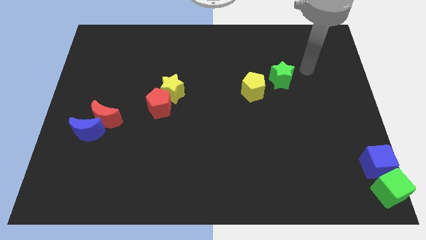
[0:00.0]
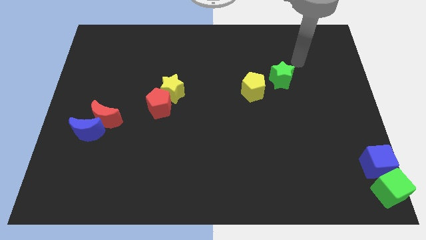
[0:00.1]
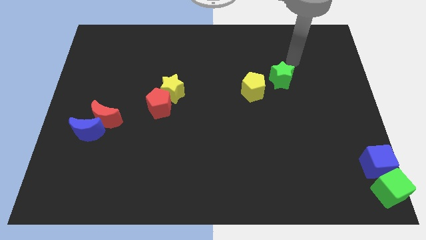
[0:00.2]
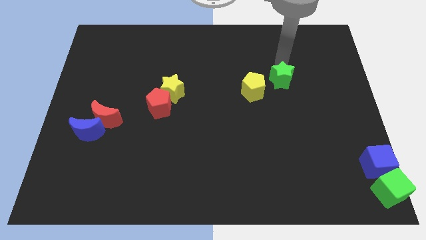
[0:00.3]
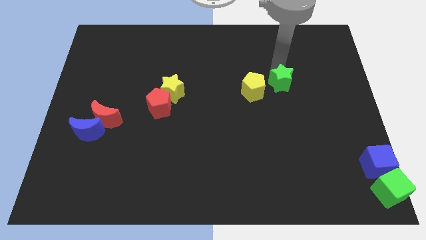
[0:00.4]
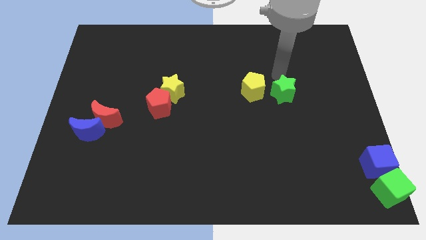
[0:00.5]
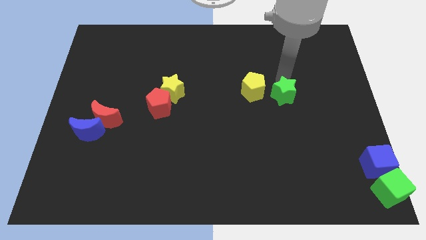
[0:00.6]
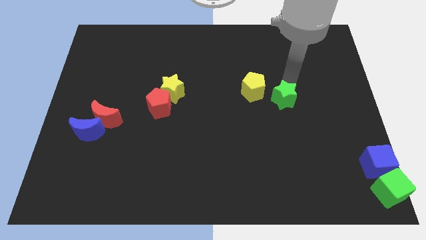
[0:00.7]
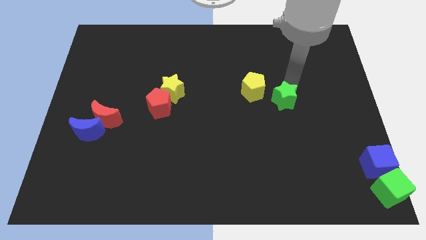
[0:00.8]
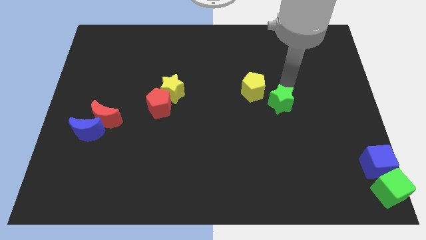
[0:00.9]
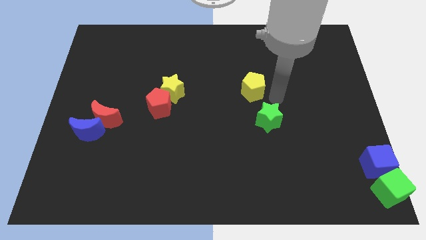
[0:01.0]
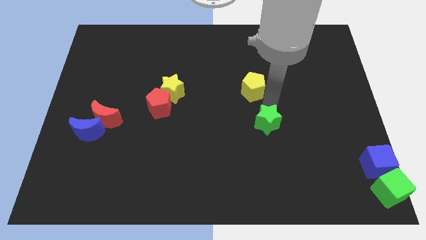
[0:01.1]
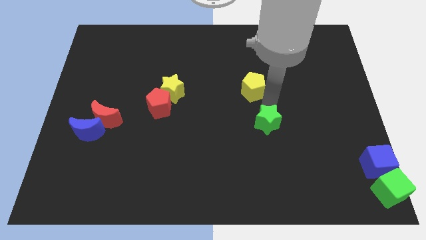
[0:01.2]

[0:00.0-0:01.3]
push green star to the bottom of yellow pentagon

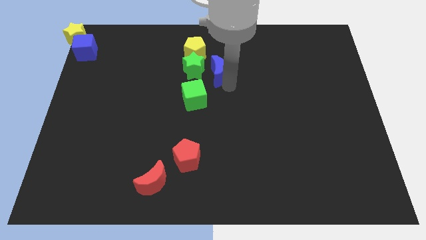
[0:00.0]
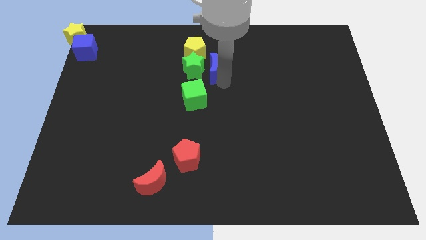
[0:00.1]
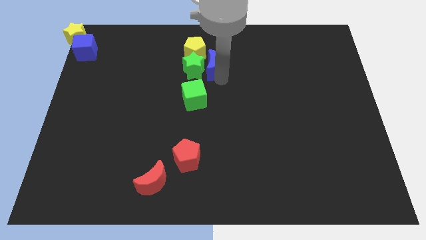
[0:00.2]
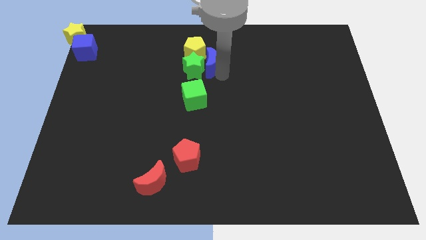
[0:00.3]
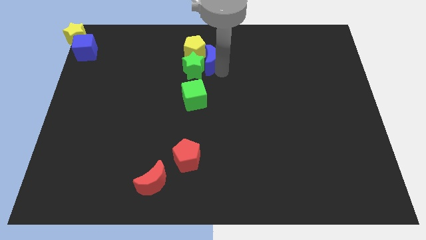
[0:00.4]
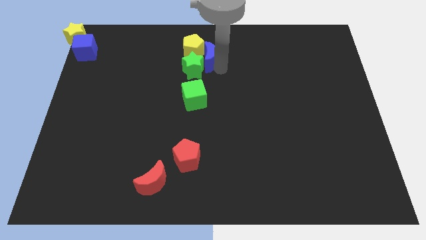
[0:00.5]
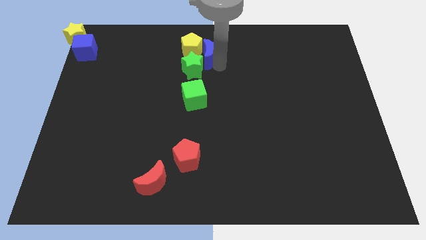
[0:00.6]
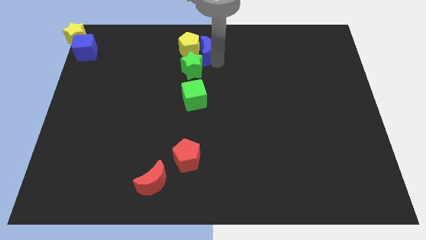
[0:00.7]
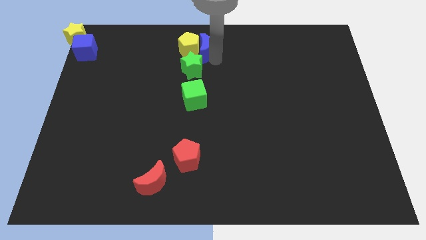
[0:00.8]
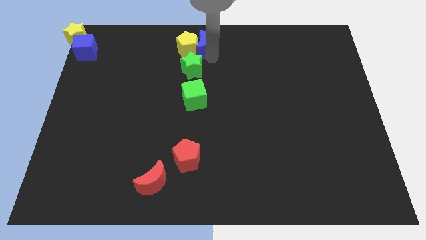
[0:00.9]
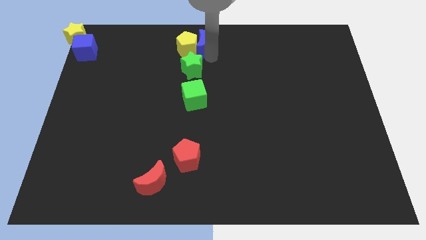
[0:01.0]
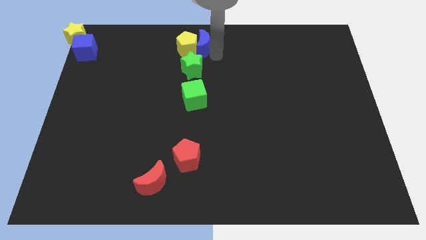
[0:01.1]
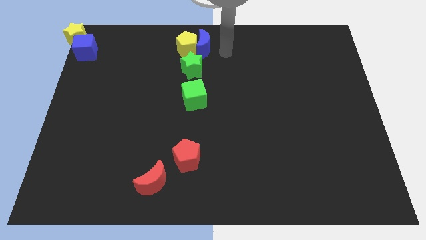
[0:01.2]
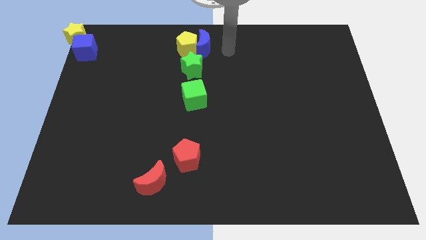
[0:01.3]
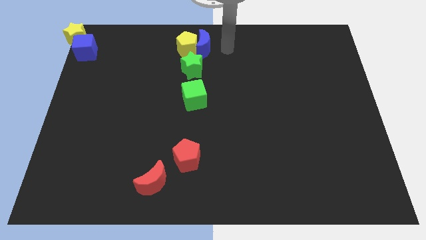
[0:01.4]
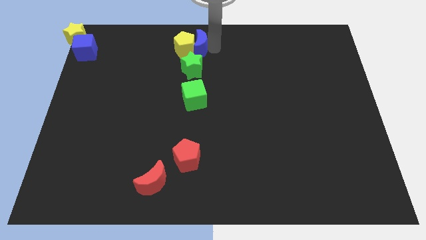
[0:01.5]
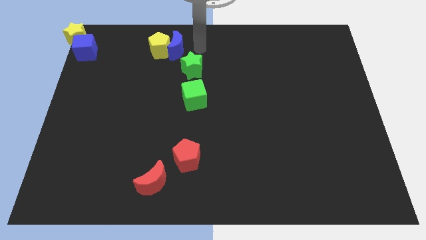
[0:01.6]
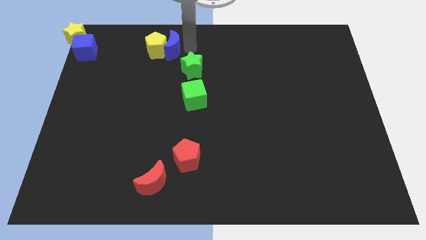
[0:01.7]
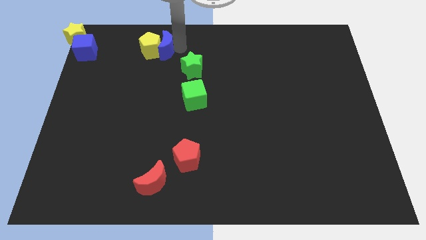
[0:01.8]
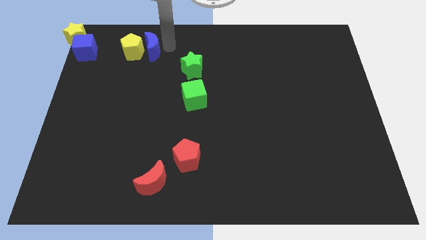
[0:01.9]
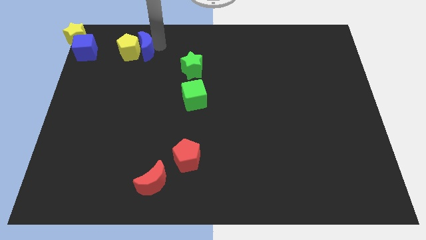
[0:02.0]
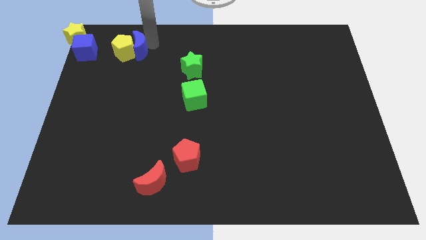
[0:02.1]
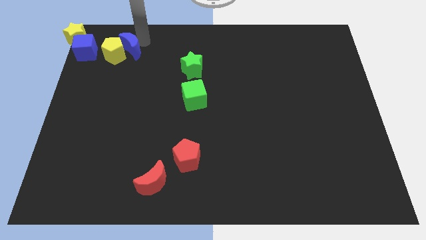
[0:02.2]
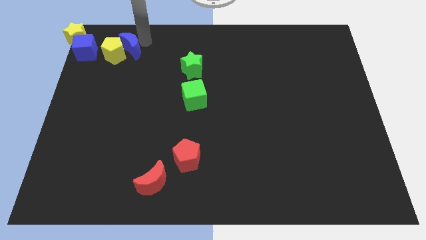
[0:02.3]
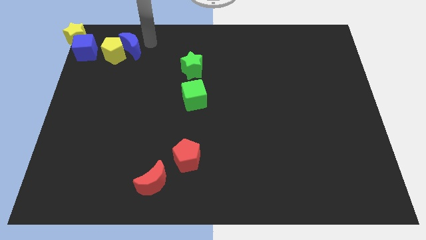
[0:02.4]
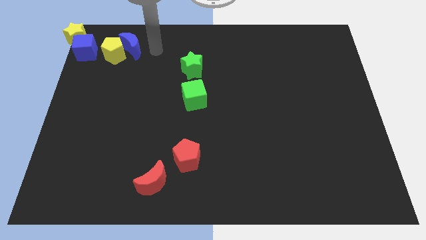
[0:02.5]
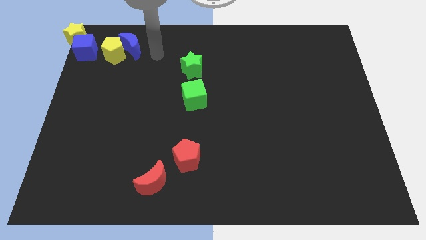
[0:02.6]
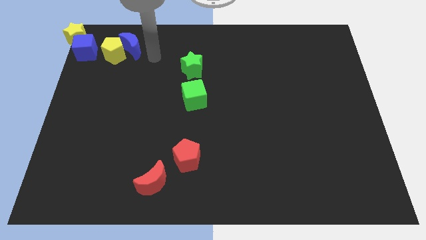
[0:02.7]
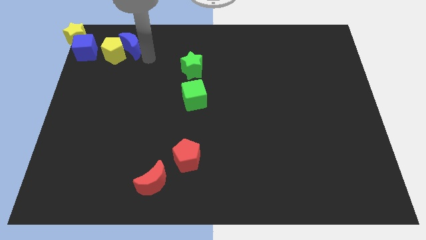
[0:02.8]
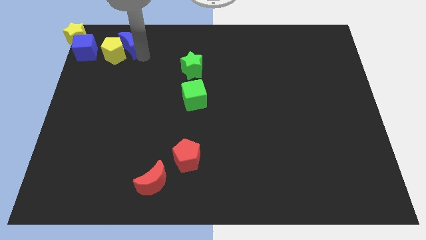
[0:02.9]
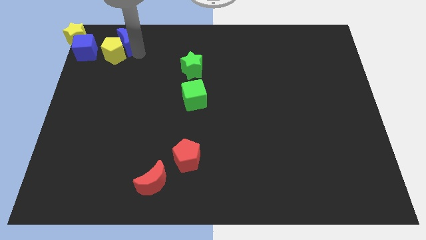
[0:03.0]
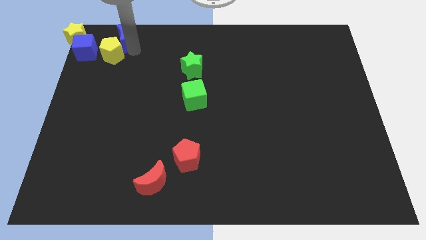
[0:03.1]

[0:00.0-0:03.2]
place yellow pentagon near blue cube

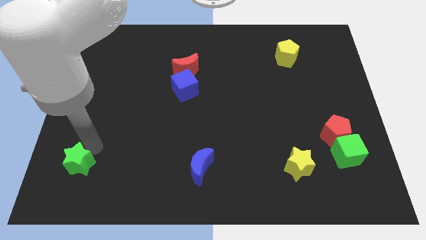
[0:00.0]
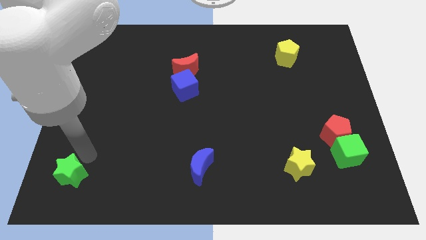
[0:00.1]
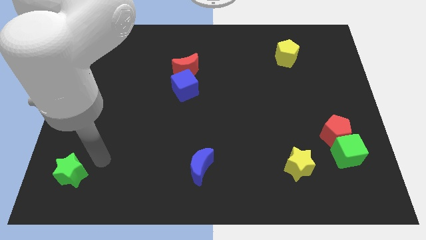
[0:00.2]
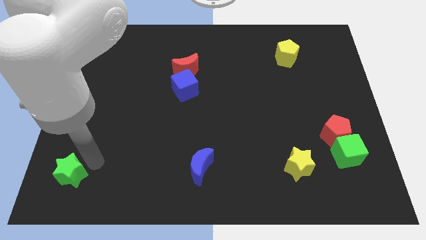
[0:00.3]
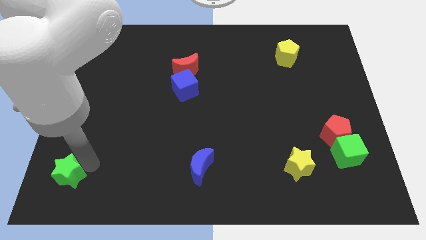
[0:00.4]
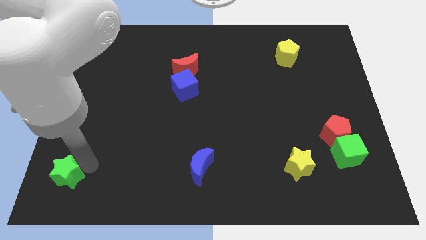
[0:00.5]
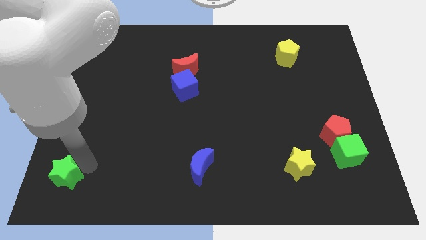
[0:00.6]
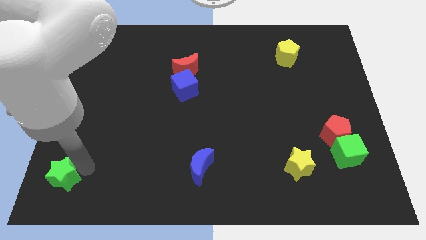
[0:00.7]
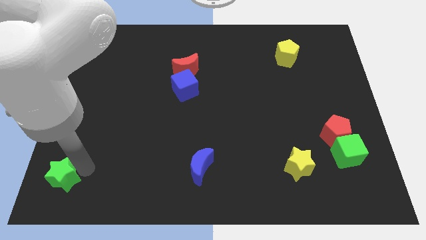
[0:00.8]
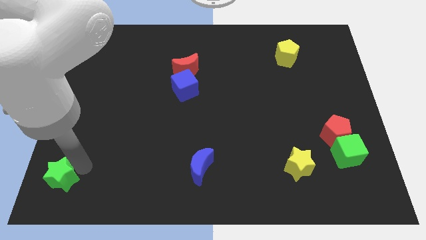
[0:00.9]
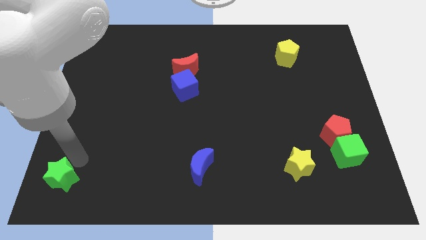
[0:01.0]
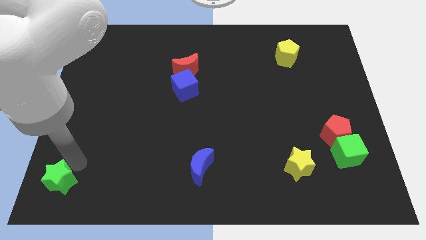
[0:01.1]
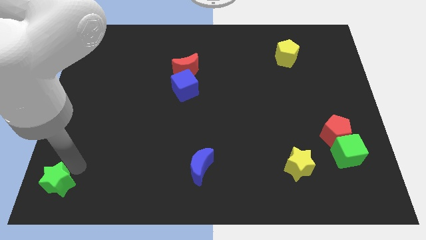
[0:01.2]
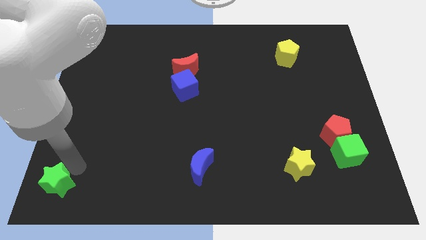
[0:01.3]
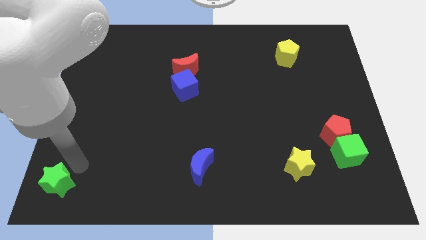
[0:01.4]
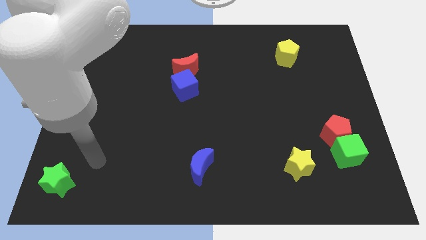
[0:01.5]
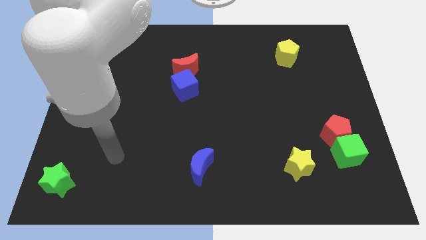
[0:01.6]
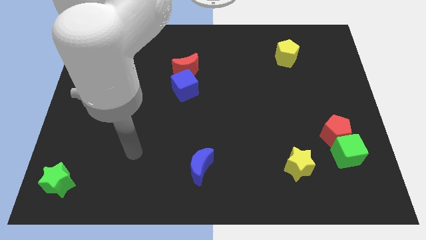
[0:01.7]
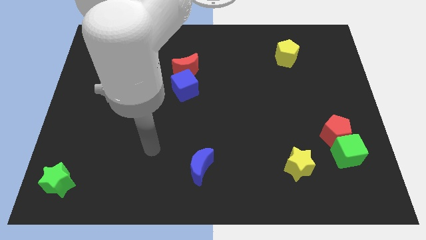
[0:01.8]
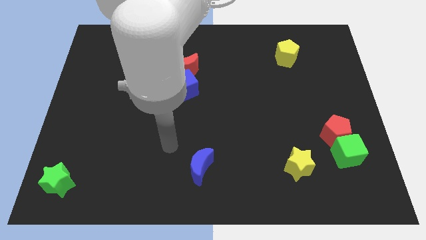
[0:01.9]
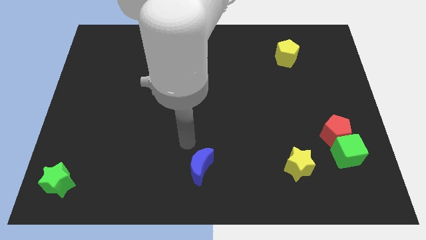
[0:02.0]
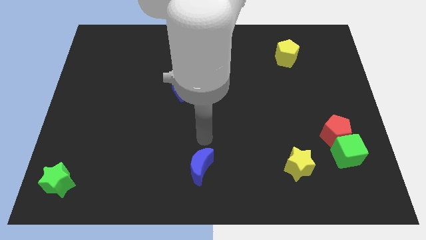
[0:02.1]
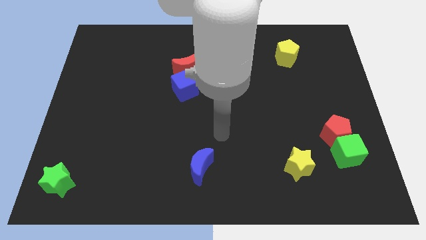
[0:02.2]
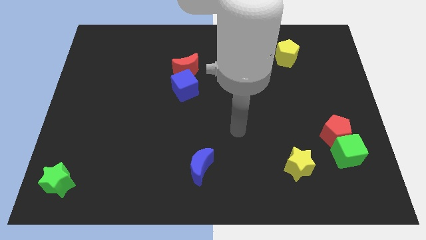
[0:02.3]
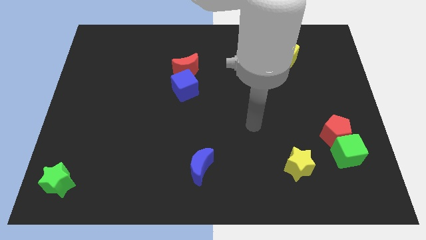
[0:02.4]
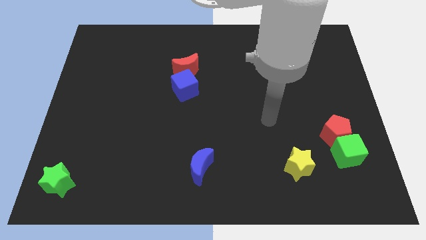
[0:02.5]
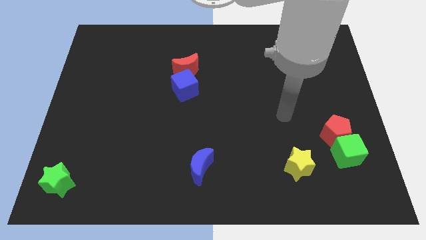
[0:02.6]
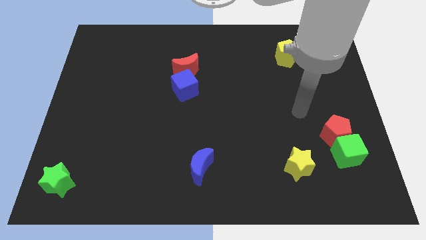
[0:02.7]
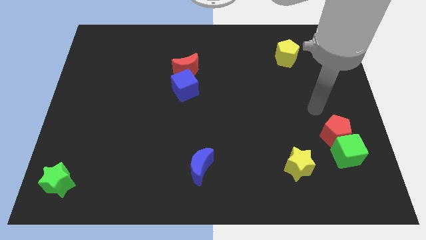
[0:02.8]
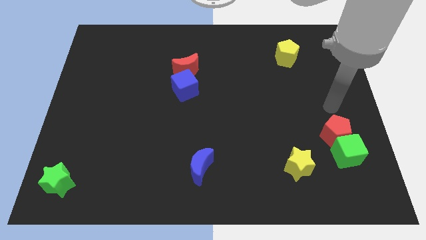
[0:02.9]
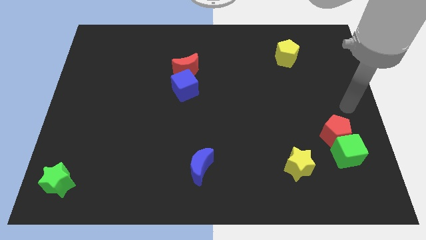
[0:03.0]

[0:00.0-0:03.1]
place the green star at the bottom left corner of the board

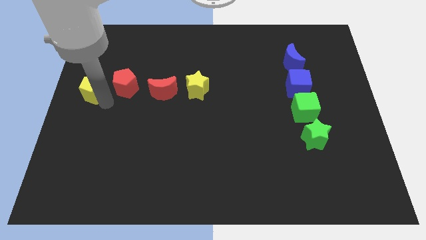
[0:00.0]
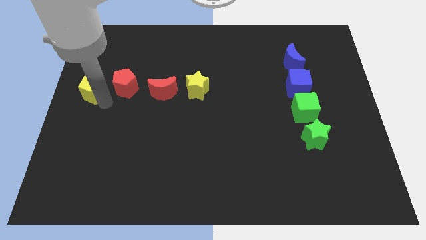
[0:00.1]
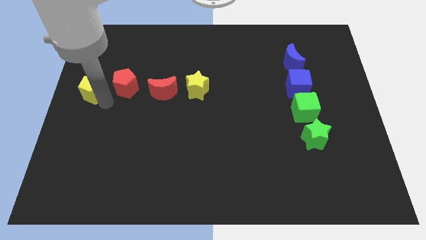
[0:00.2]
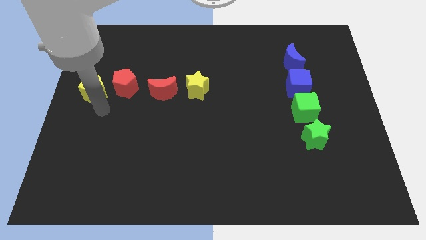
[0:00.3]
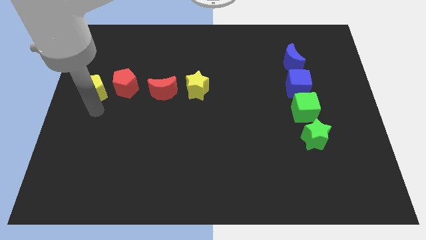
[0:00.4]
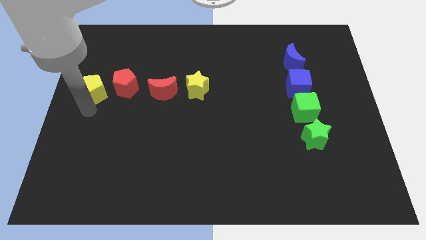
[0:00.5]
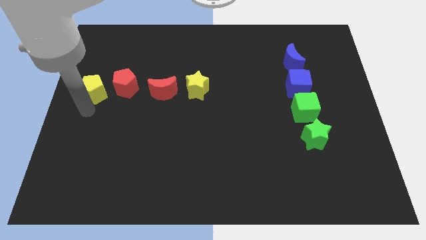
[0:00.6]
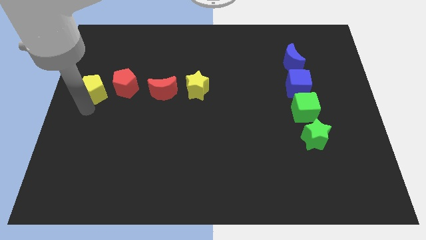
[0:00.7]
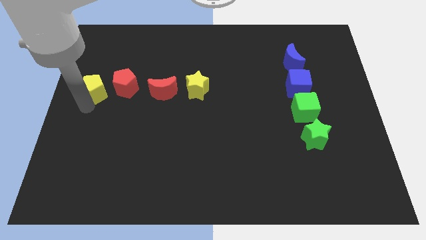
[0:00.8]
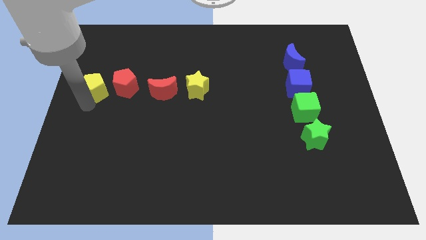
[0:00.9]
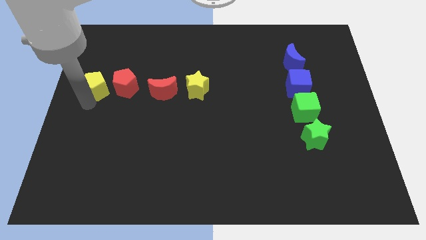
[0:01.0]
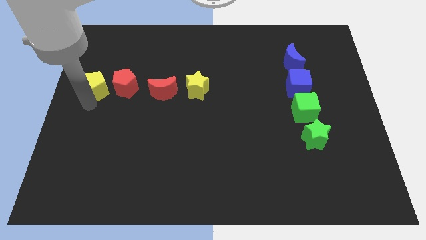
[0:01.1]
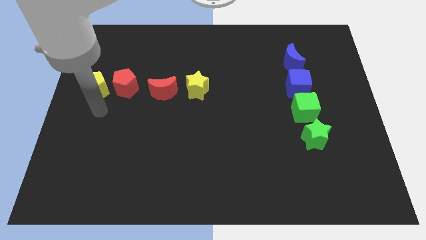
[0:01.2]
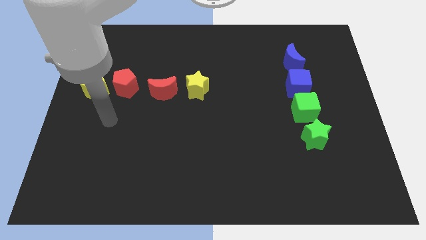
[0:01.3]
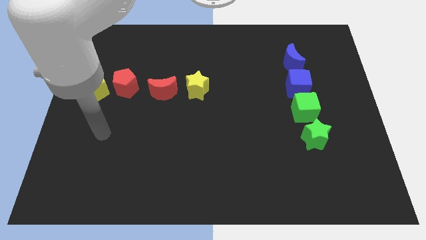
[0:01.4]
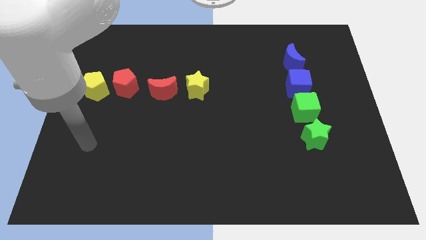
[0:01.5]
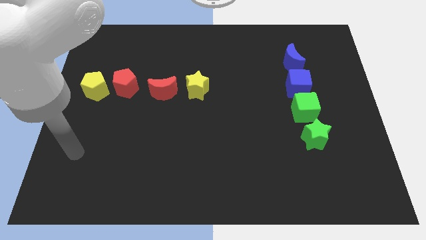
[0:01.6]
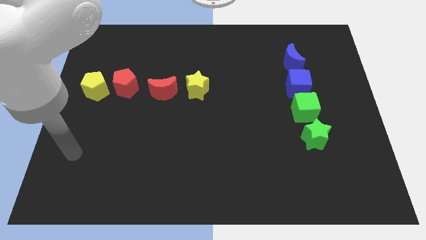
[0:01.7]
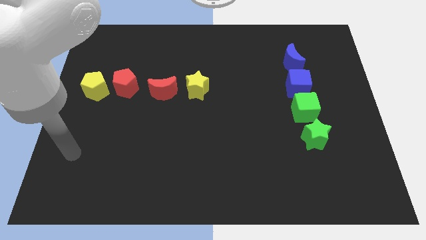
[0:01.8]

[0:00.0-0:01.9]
pull the yellow pentagon near to the red pentagon
